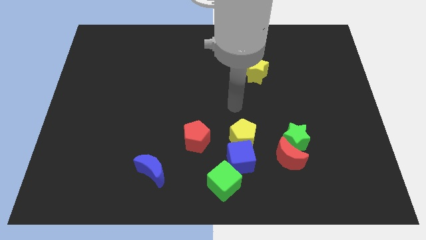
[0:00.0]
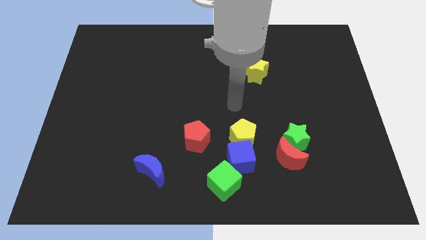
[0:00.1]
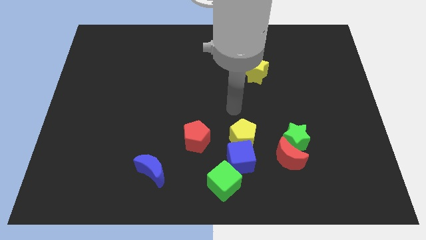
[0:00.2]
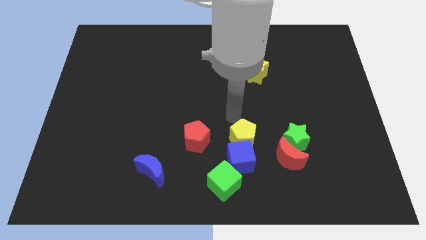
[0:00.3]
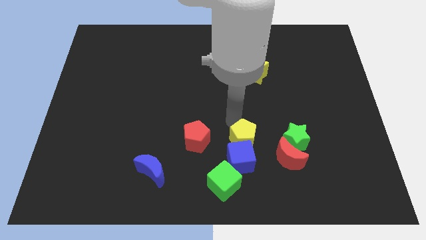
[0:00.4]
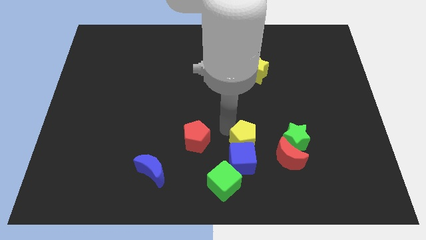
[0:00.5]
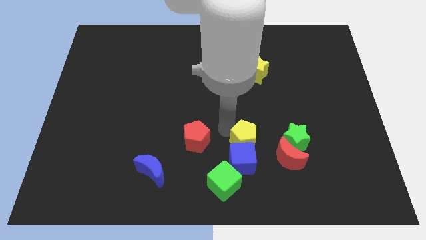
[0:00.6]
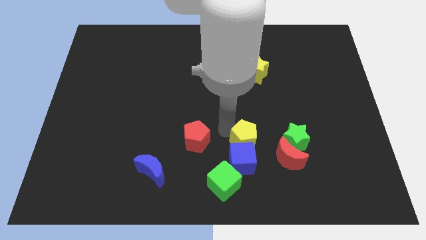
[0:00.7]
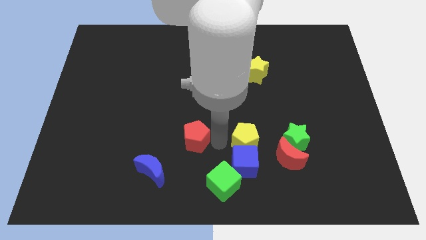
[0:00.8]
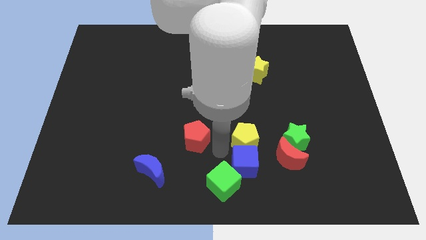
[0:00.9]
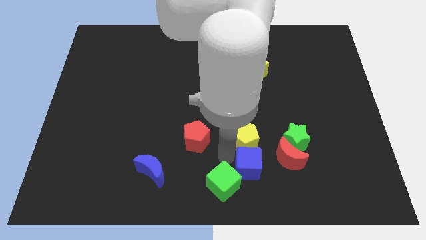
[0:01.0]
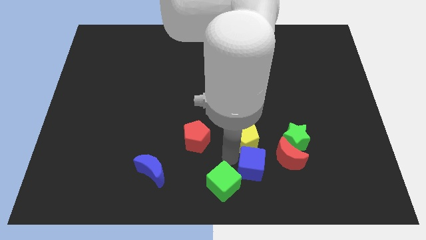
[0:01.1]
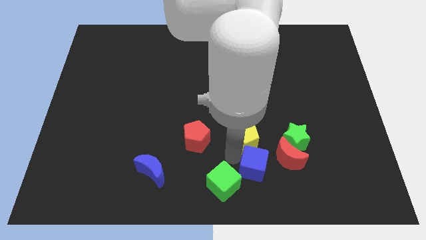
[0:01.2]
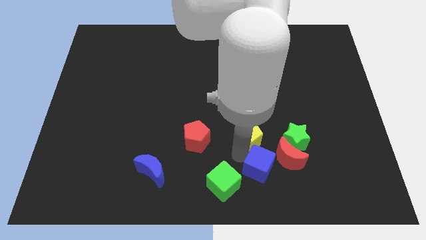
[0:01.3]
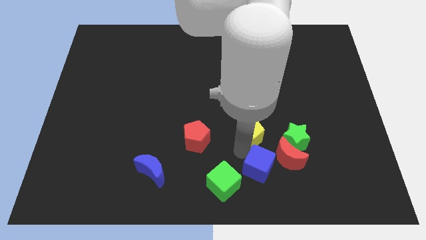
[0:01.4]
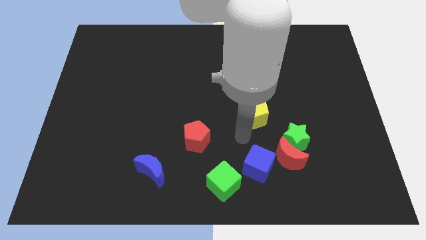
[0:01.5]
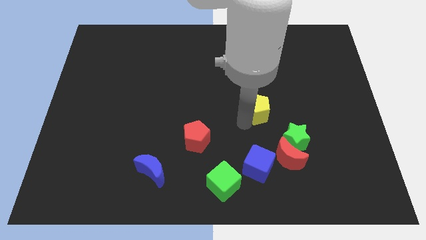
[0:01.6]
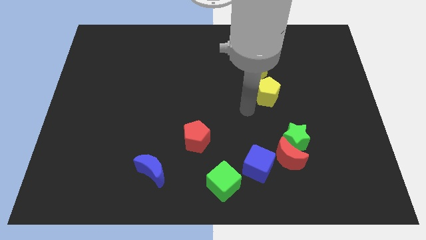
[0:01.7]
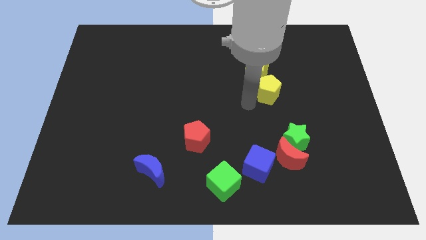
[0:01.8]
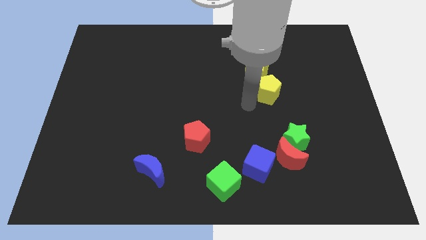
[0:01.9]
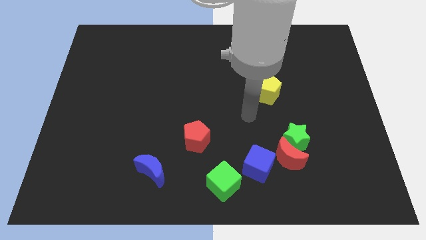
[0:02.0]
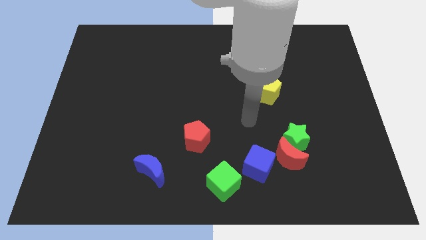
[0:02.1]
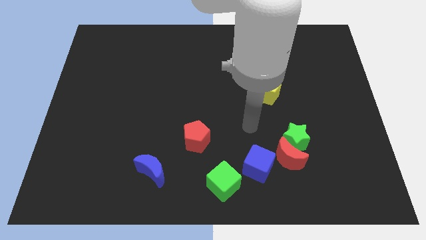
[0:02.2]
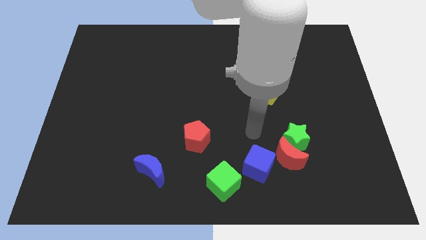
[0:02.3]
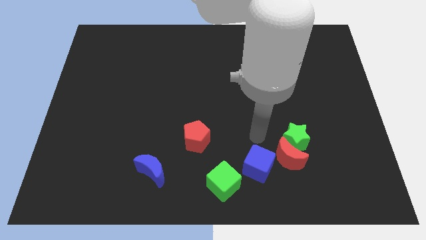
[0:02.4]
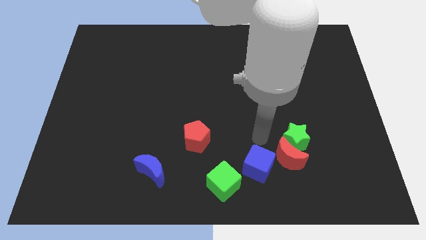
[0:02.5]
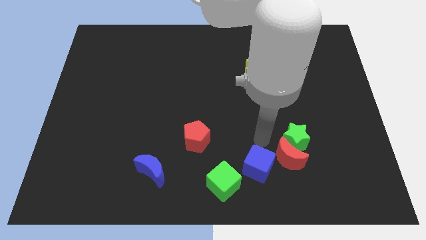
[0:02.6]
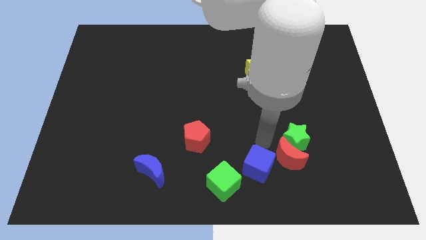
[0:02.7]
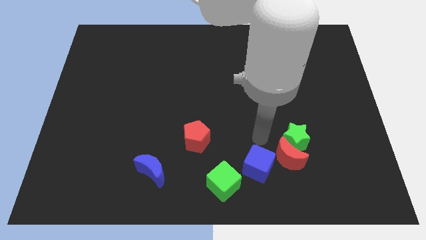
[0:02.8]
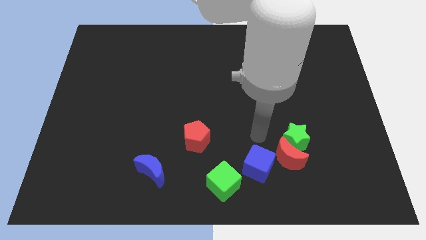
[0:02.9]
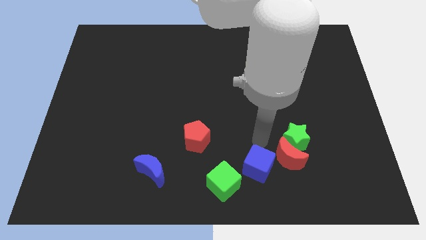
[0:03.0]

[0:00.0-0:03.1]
push the yellow pentagon to the bottom of the yellow star

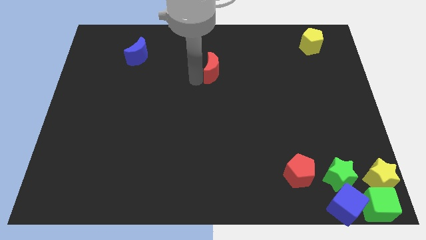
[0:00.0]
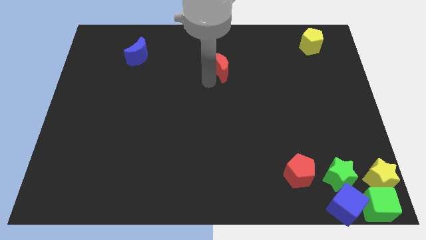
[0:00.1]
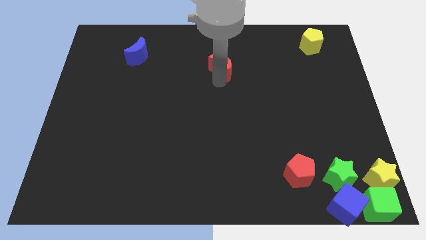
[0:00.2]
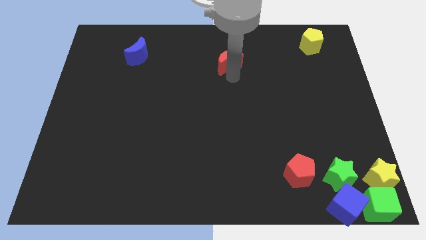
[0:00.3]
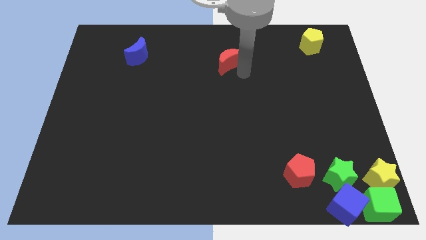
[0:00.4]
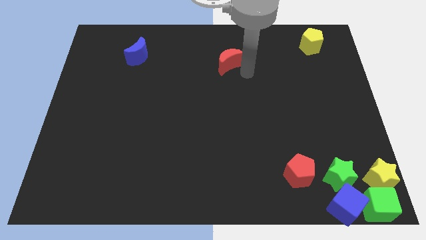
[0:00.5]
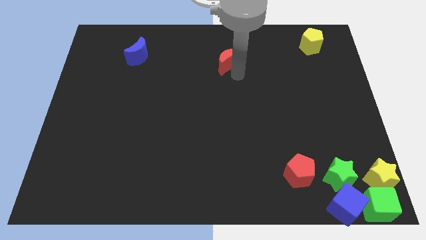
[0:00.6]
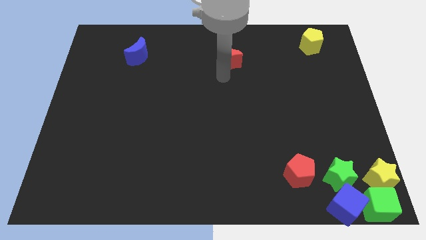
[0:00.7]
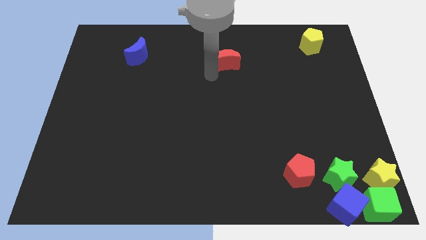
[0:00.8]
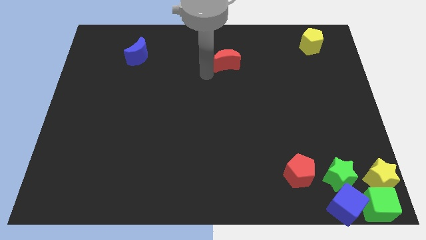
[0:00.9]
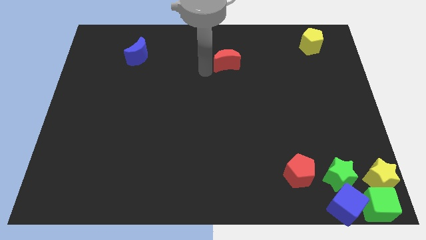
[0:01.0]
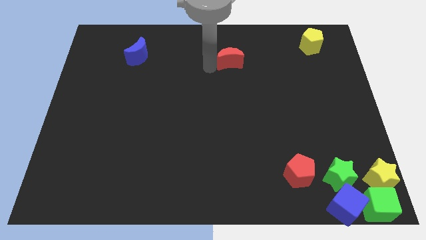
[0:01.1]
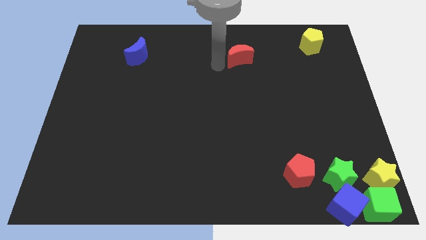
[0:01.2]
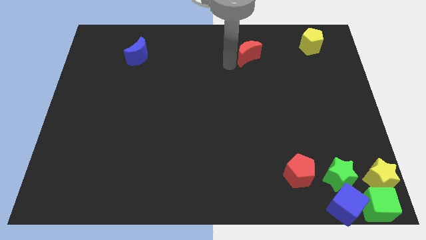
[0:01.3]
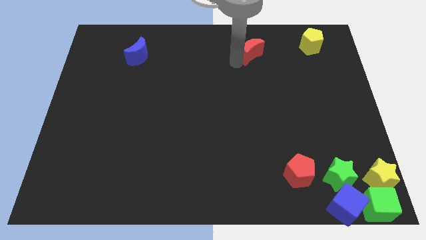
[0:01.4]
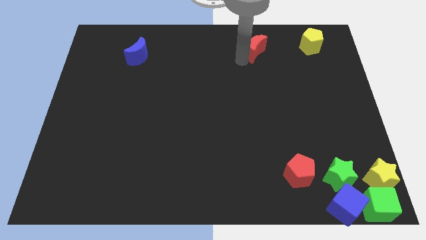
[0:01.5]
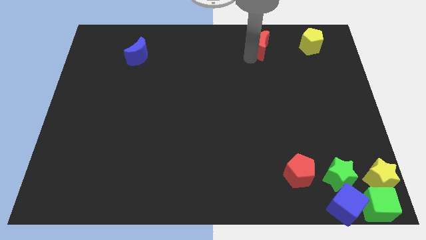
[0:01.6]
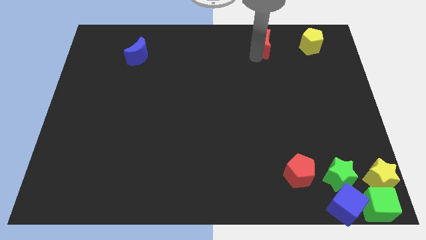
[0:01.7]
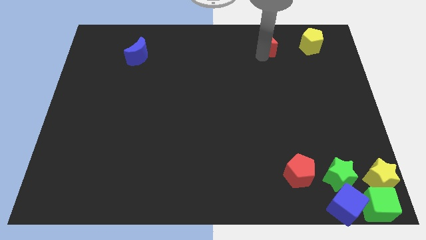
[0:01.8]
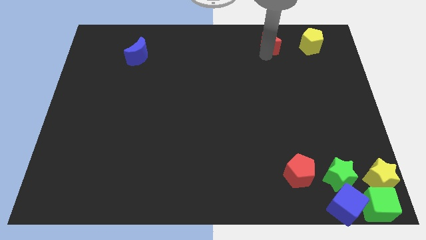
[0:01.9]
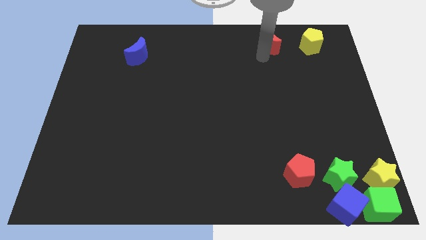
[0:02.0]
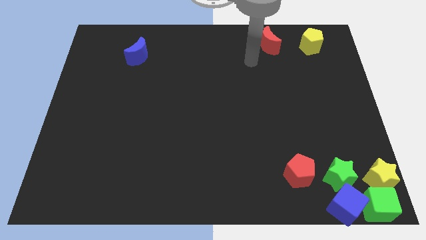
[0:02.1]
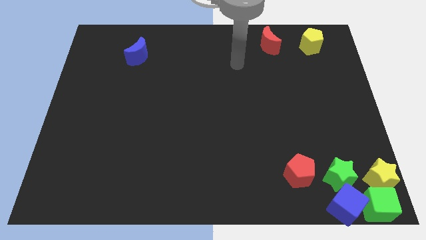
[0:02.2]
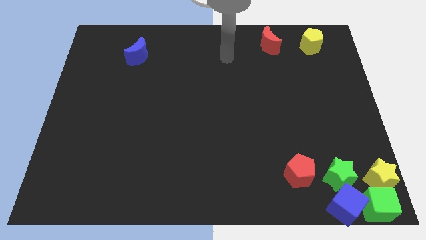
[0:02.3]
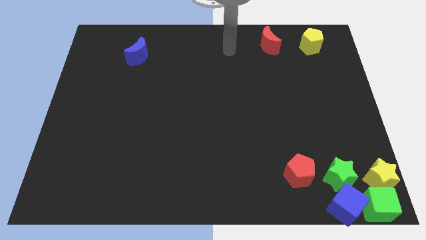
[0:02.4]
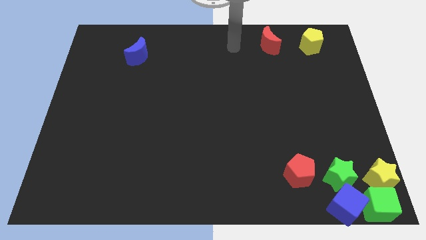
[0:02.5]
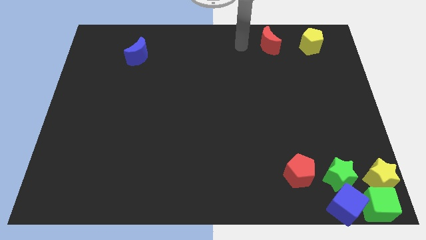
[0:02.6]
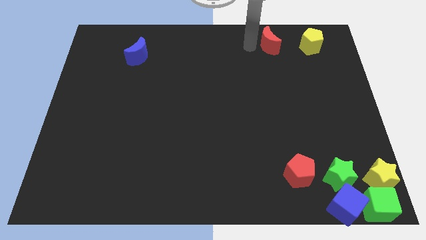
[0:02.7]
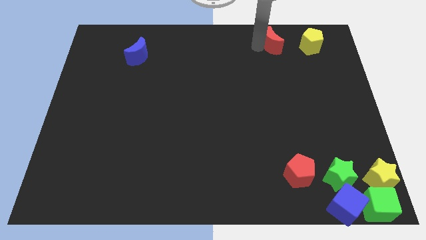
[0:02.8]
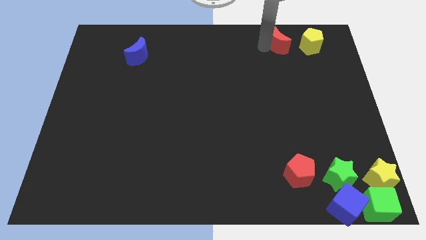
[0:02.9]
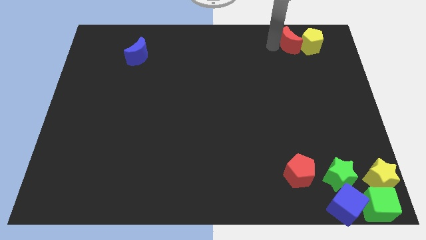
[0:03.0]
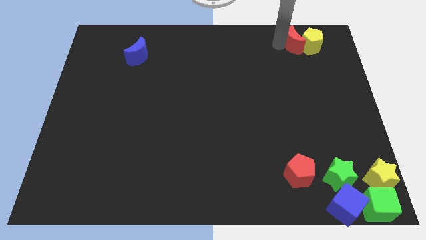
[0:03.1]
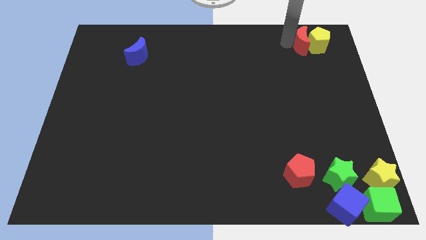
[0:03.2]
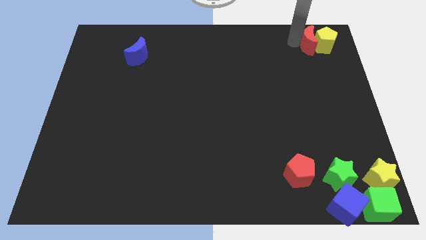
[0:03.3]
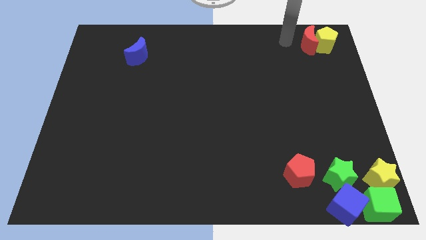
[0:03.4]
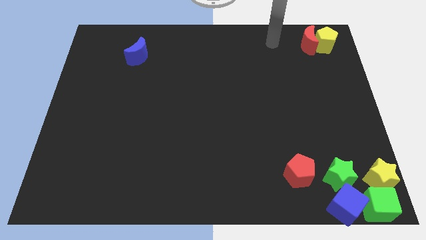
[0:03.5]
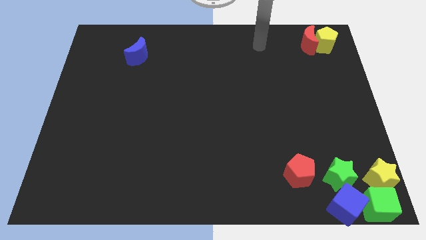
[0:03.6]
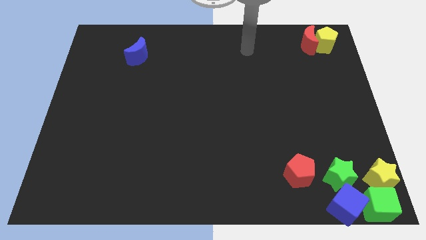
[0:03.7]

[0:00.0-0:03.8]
move the red crescent into the left side of the yellow pentagon

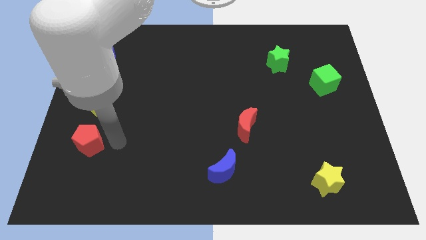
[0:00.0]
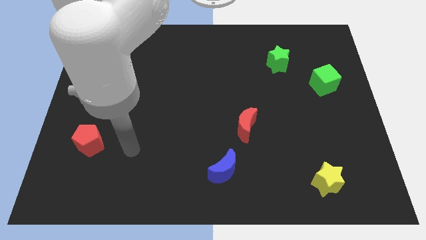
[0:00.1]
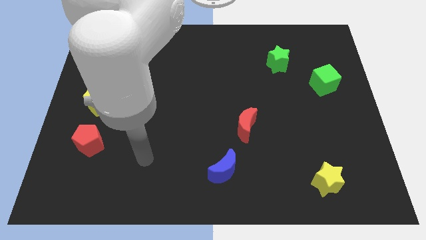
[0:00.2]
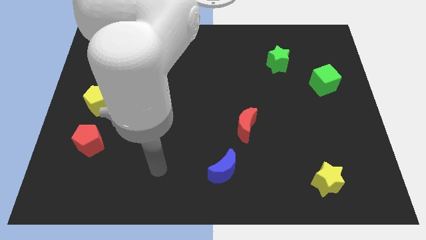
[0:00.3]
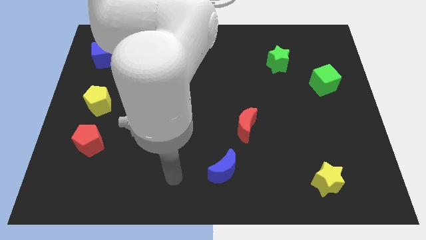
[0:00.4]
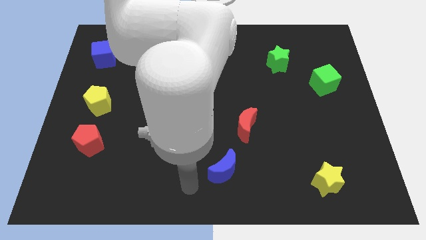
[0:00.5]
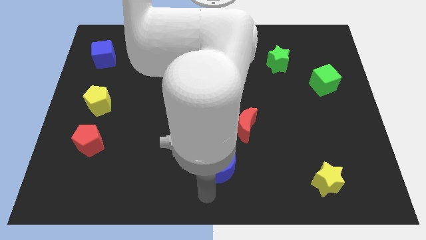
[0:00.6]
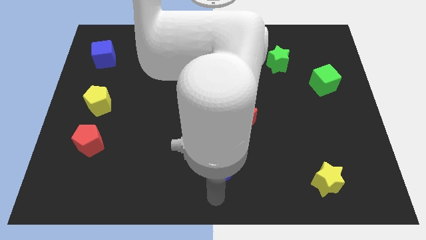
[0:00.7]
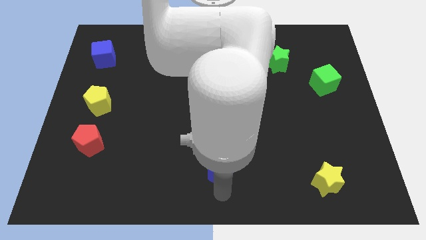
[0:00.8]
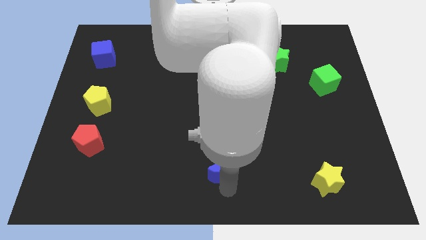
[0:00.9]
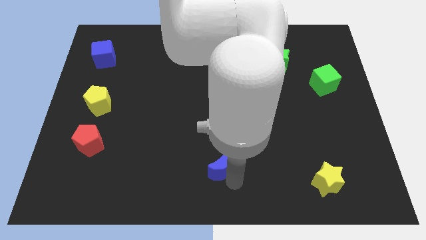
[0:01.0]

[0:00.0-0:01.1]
move your arm to the bottom of blue crescent

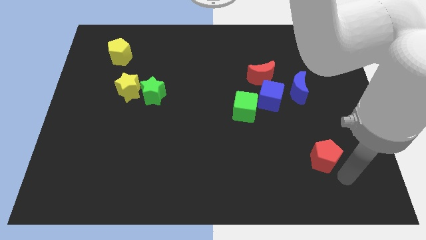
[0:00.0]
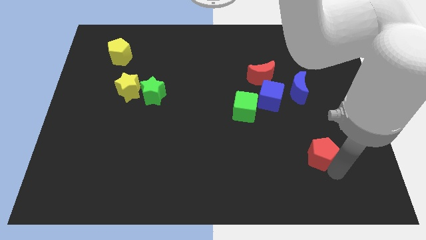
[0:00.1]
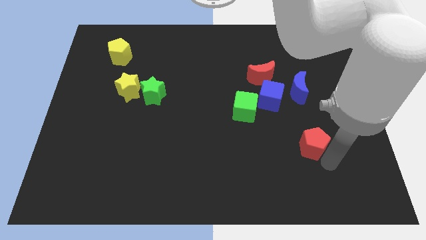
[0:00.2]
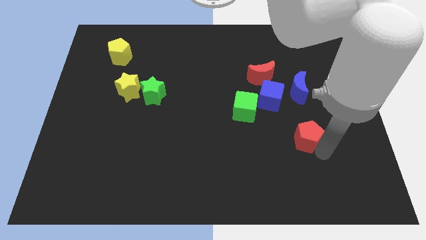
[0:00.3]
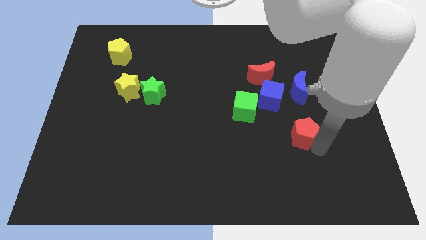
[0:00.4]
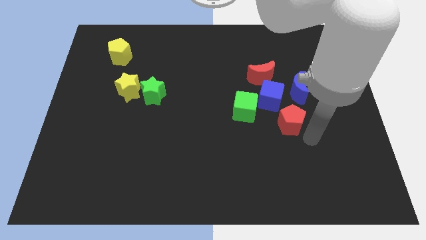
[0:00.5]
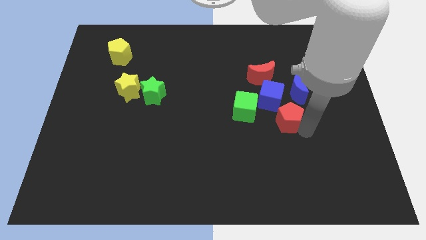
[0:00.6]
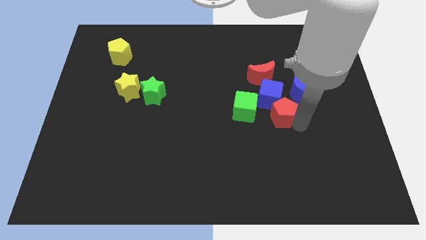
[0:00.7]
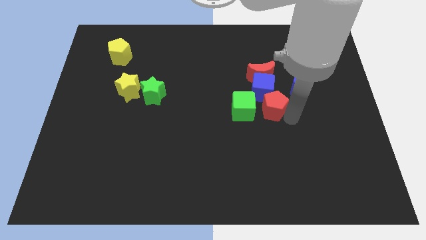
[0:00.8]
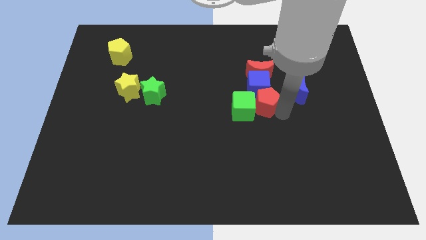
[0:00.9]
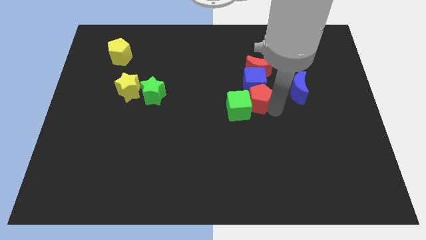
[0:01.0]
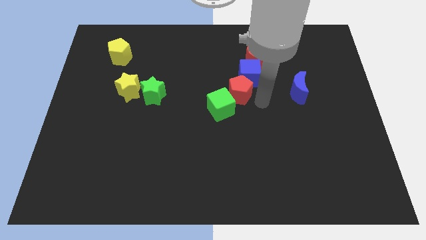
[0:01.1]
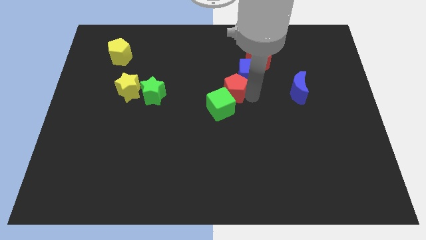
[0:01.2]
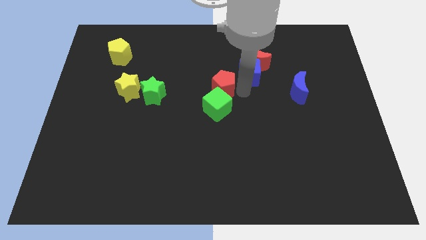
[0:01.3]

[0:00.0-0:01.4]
push the blue cube with the red pentagon
